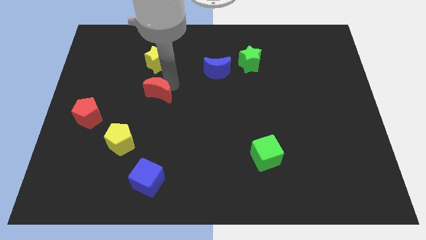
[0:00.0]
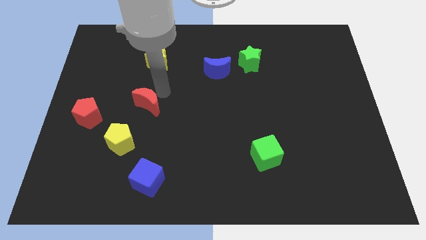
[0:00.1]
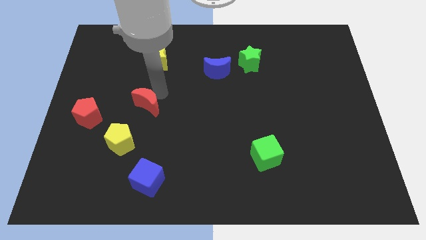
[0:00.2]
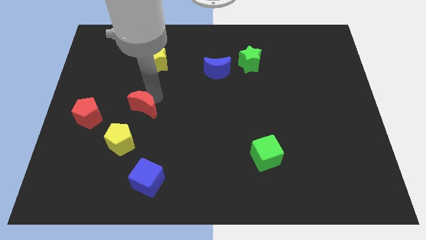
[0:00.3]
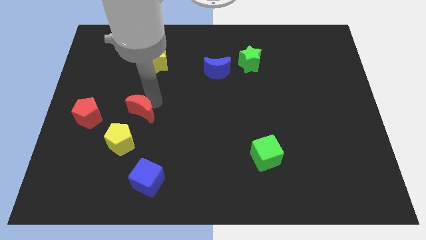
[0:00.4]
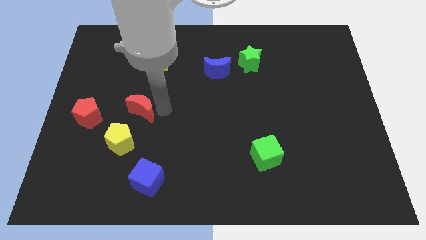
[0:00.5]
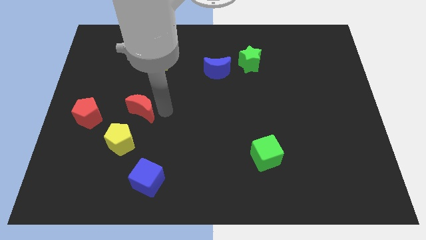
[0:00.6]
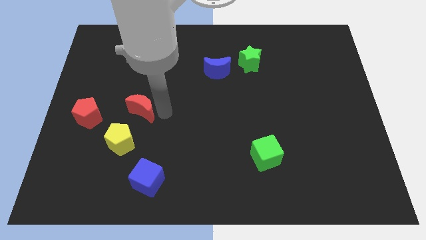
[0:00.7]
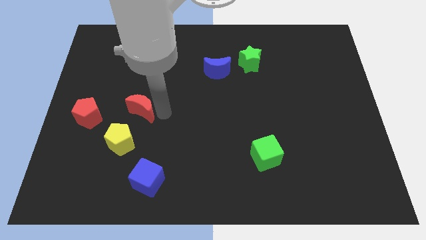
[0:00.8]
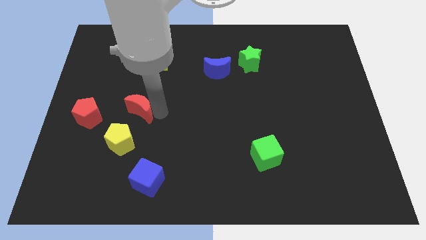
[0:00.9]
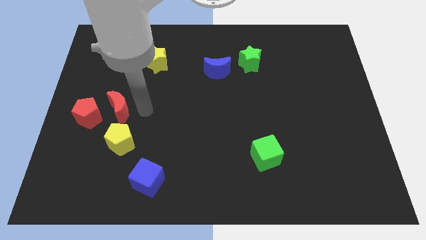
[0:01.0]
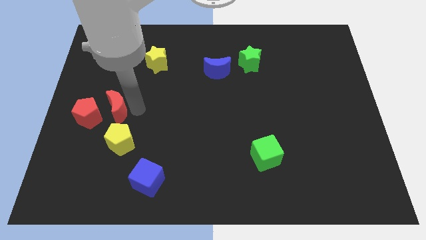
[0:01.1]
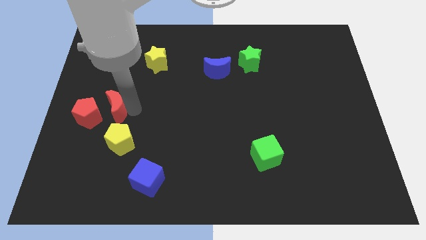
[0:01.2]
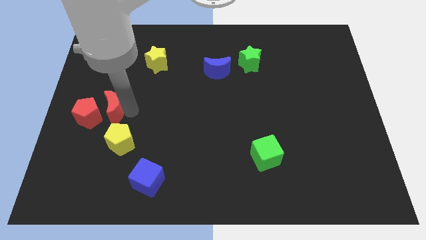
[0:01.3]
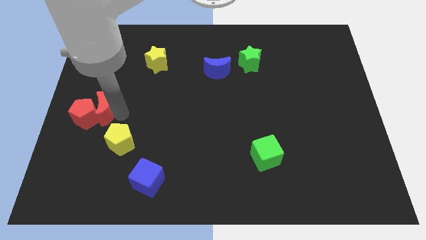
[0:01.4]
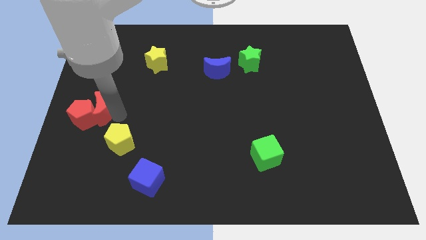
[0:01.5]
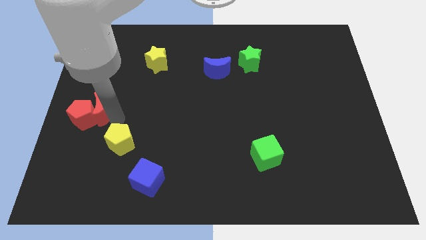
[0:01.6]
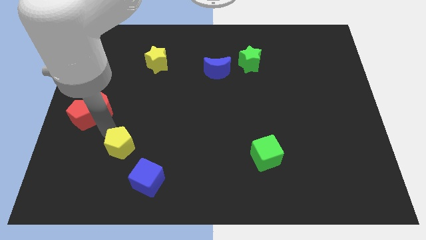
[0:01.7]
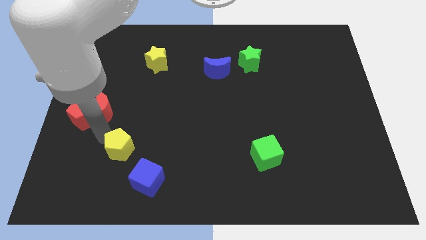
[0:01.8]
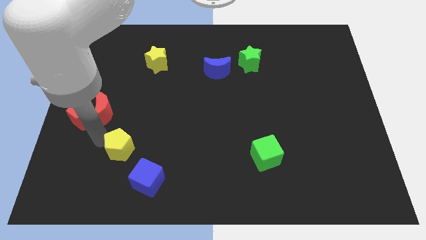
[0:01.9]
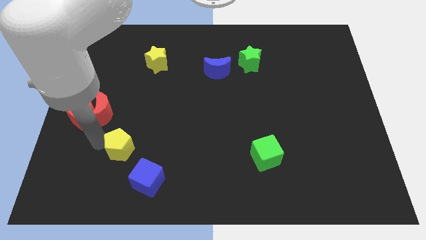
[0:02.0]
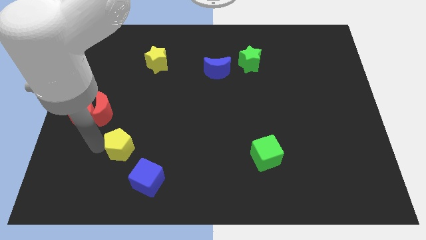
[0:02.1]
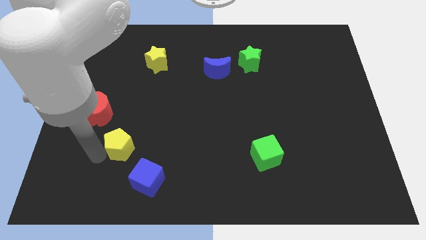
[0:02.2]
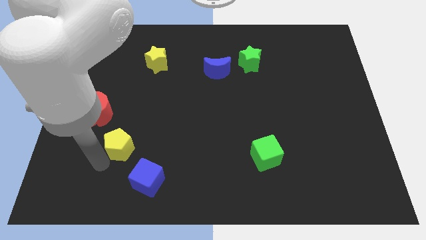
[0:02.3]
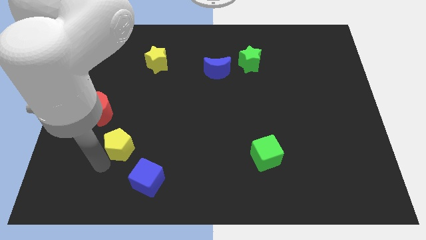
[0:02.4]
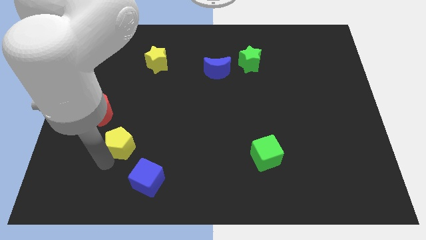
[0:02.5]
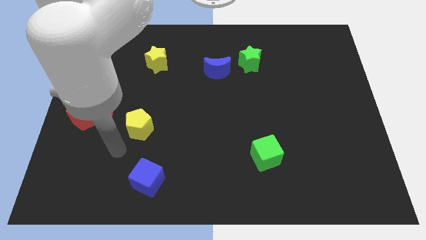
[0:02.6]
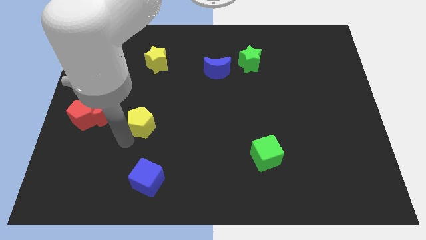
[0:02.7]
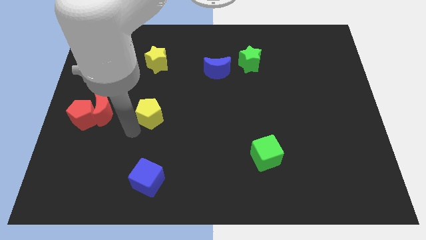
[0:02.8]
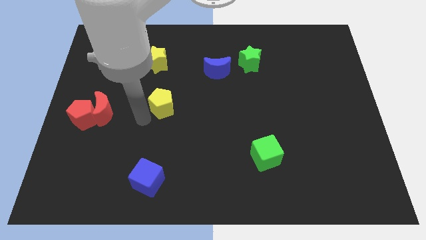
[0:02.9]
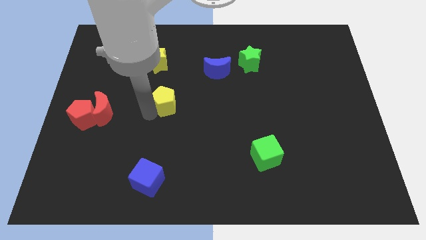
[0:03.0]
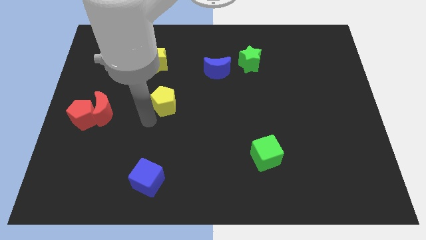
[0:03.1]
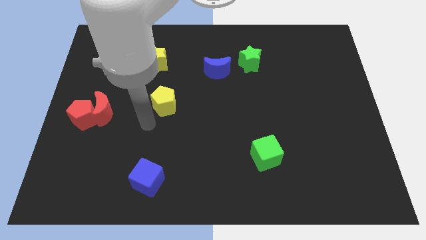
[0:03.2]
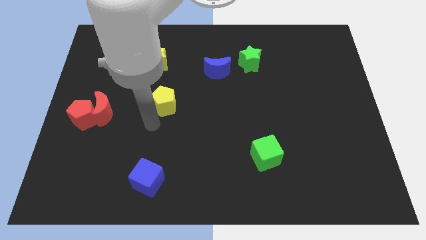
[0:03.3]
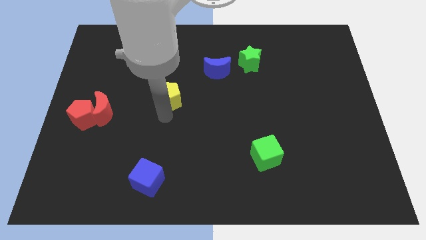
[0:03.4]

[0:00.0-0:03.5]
move the yellow pentagon to the center of the board

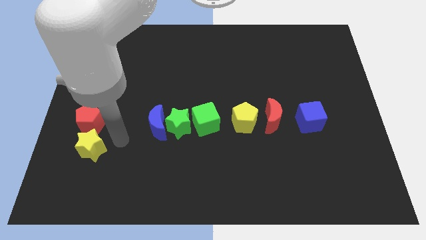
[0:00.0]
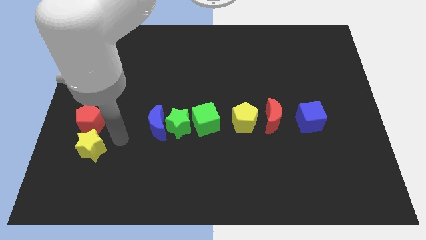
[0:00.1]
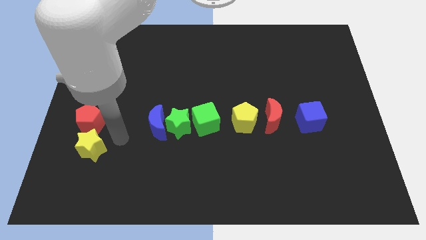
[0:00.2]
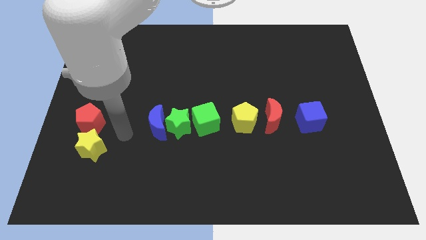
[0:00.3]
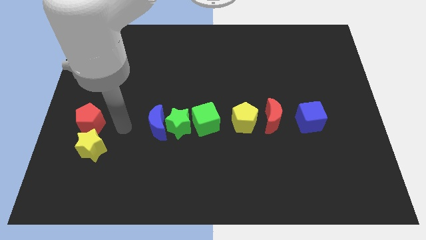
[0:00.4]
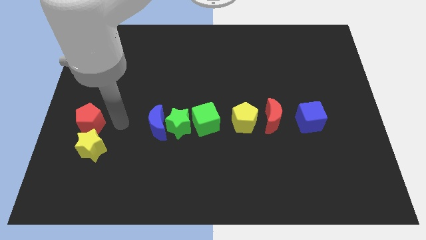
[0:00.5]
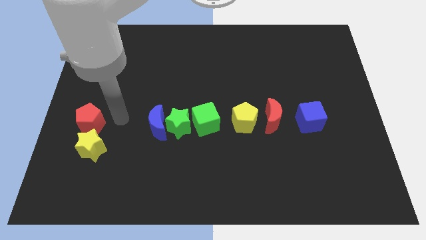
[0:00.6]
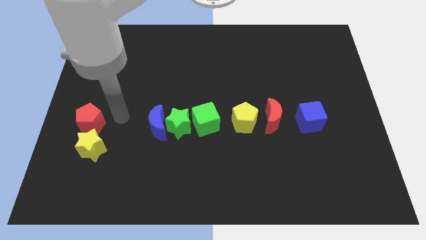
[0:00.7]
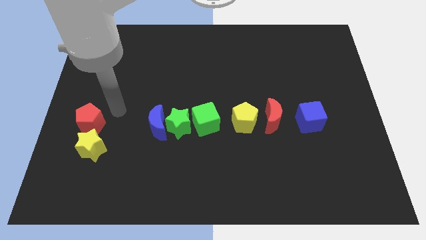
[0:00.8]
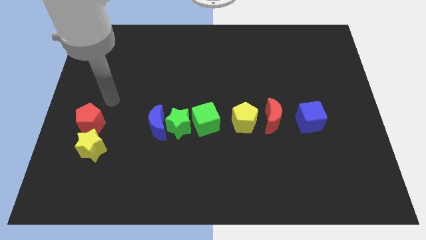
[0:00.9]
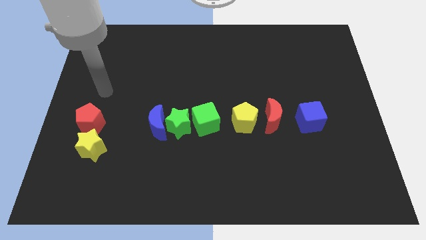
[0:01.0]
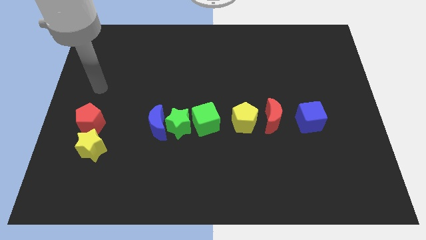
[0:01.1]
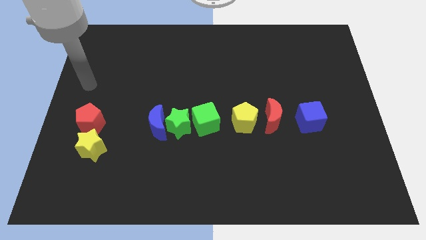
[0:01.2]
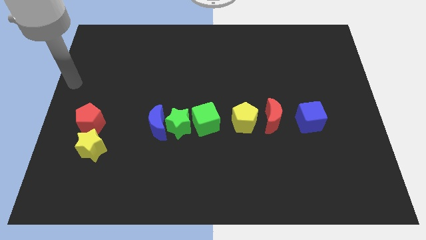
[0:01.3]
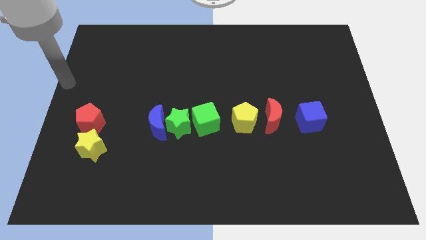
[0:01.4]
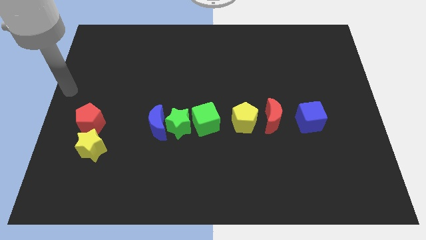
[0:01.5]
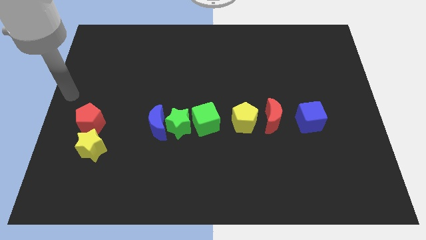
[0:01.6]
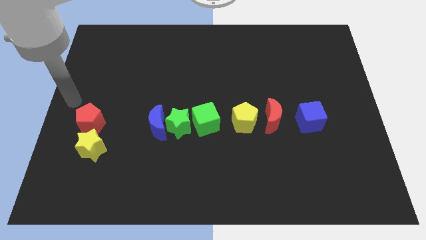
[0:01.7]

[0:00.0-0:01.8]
point your arm at the left center of the board

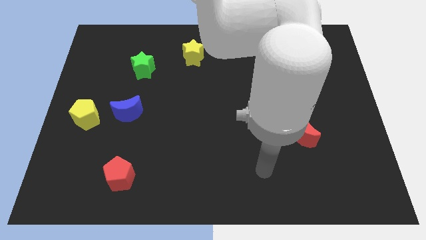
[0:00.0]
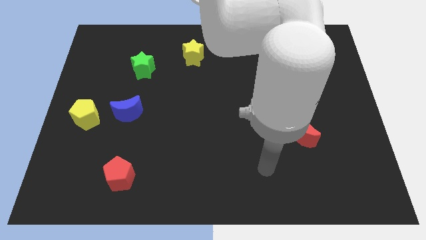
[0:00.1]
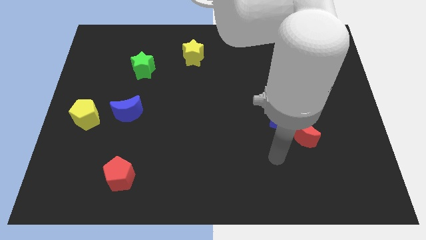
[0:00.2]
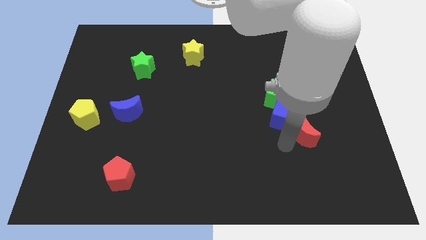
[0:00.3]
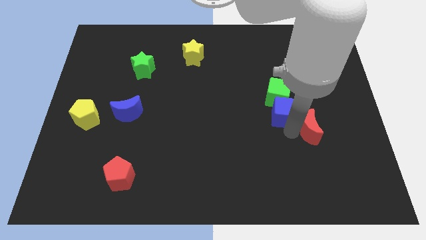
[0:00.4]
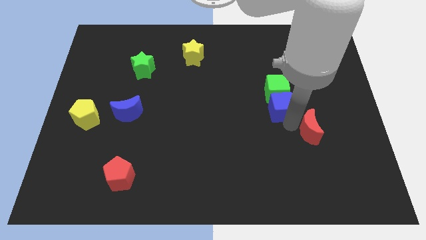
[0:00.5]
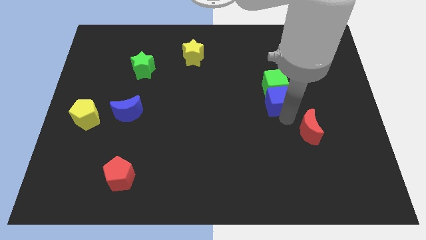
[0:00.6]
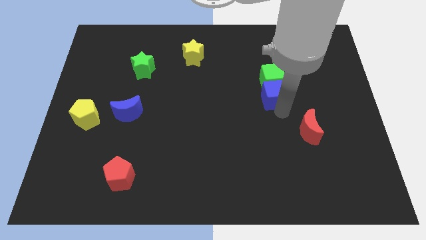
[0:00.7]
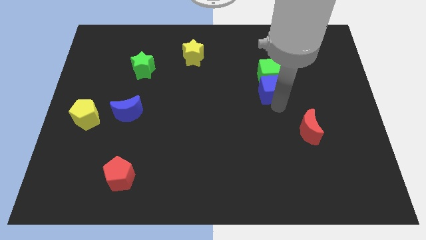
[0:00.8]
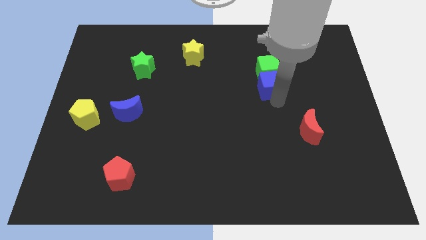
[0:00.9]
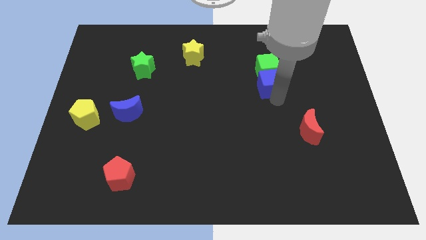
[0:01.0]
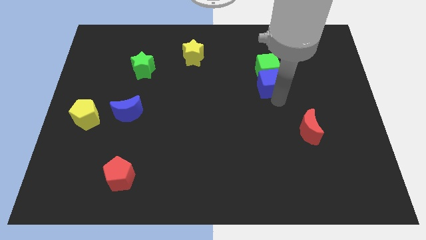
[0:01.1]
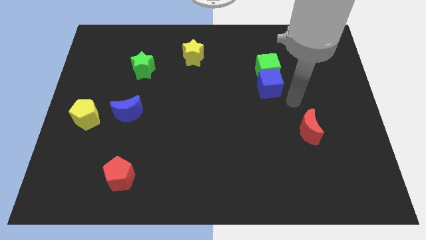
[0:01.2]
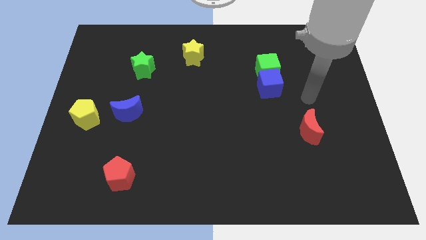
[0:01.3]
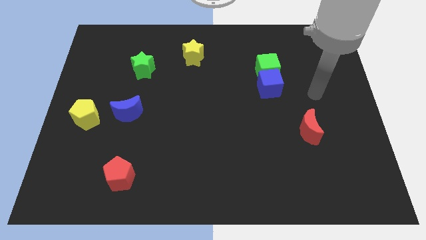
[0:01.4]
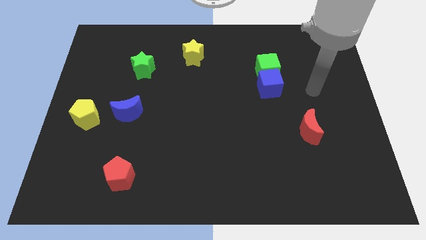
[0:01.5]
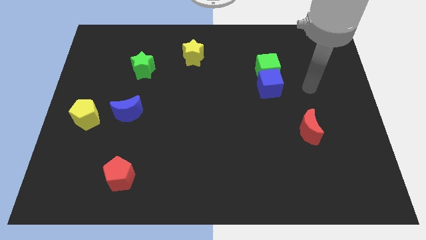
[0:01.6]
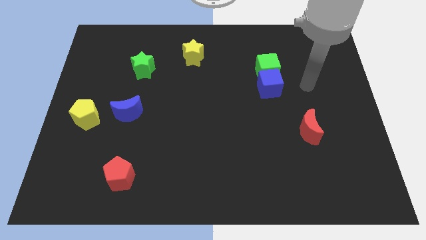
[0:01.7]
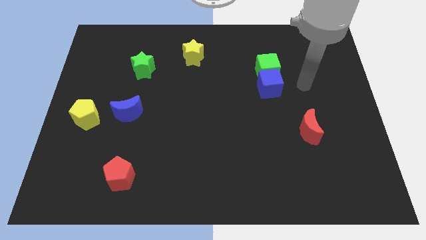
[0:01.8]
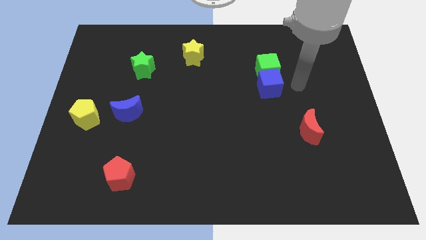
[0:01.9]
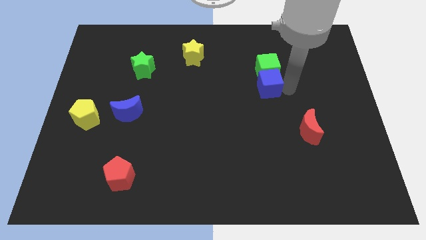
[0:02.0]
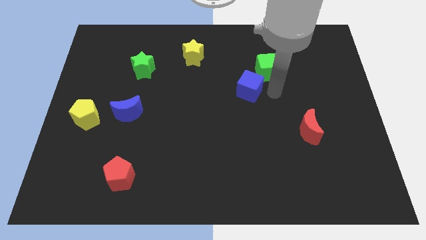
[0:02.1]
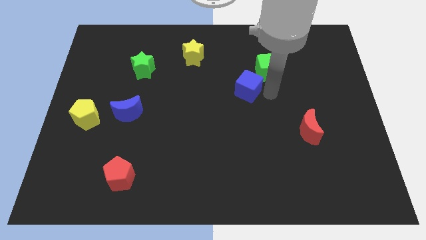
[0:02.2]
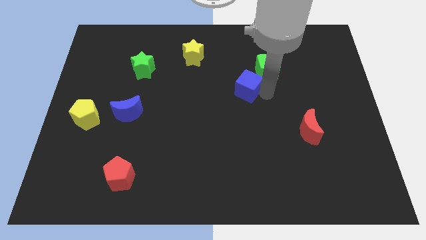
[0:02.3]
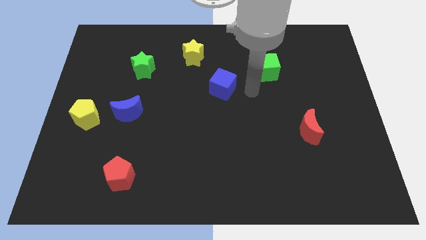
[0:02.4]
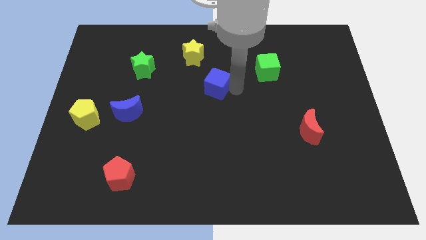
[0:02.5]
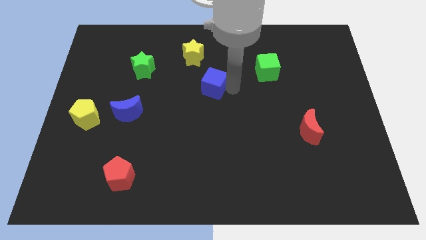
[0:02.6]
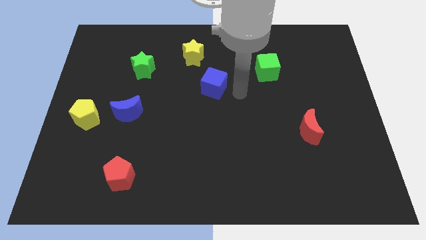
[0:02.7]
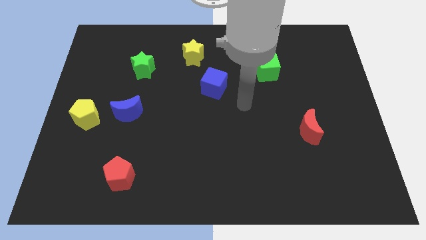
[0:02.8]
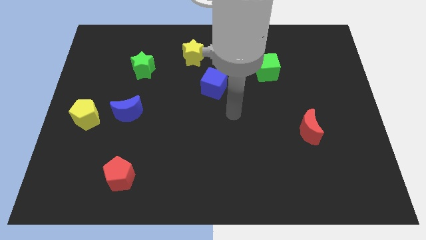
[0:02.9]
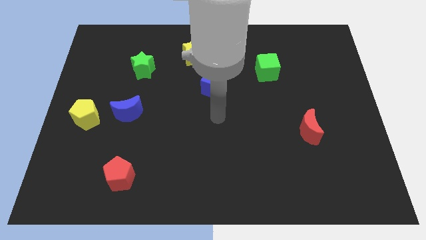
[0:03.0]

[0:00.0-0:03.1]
move your arm towards the green and blue cube

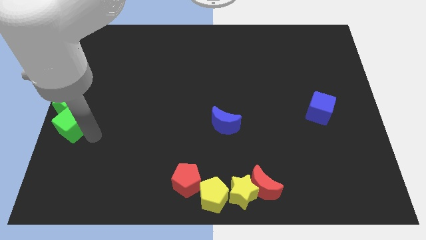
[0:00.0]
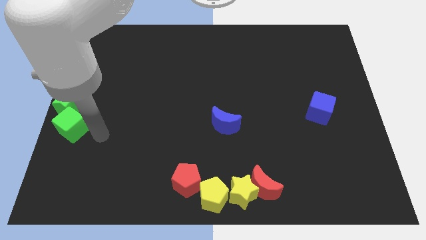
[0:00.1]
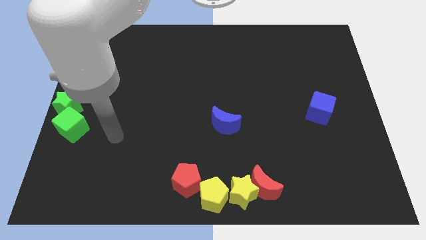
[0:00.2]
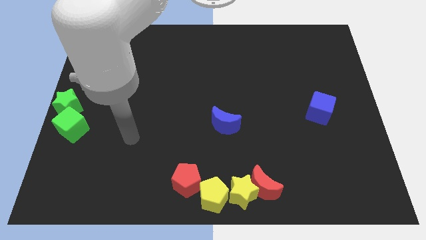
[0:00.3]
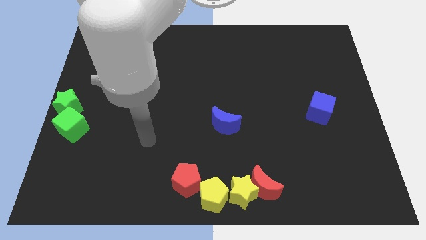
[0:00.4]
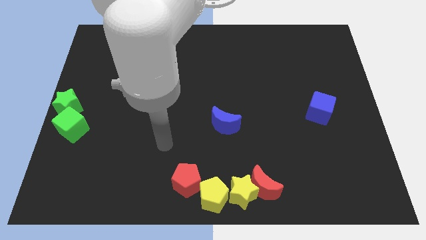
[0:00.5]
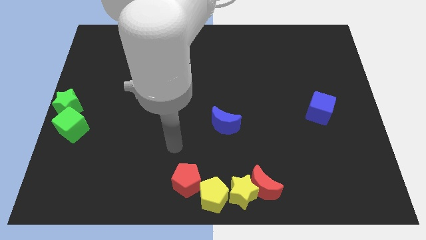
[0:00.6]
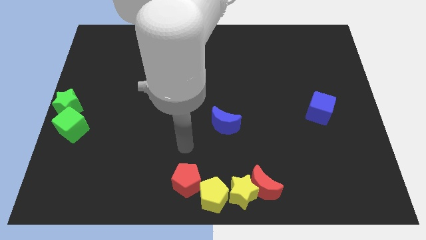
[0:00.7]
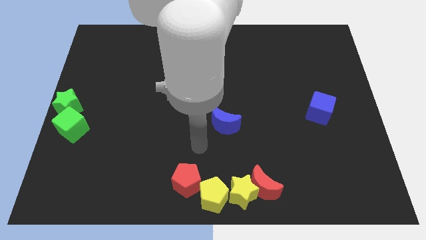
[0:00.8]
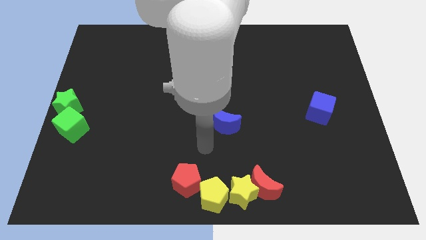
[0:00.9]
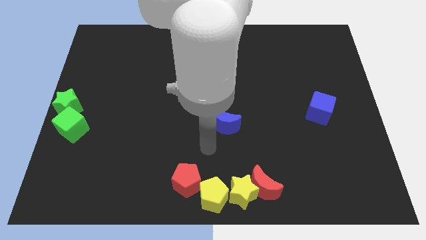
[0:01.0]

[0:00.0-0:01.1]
move the arm towards the blue crescent
